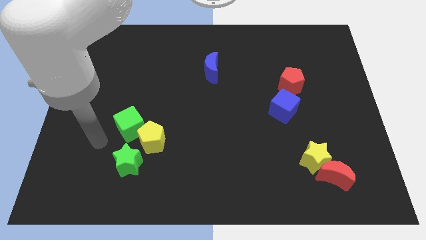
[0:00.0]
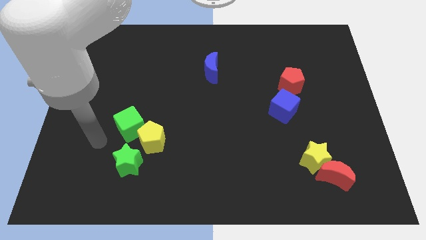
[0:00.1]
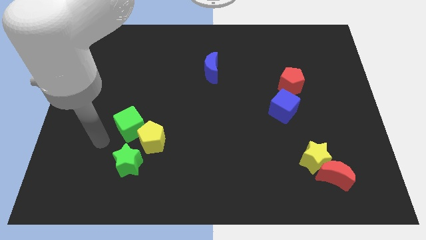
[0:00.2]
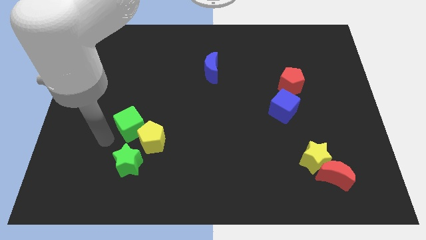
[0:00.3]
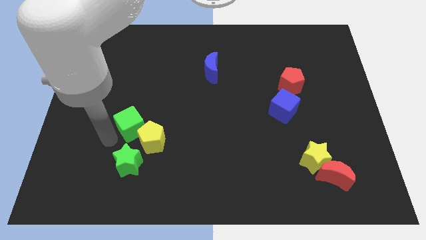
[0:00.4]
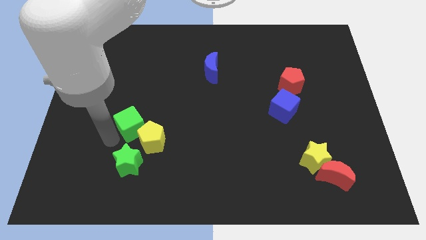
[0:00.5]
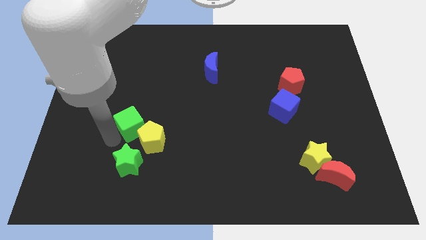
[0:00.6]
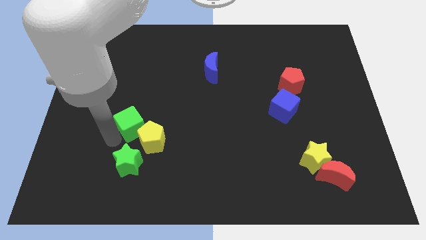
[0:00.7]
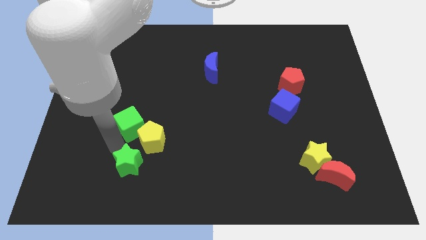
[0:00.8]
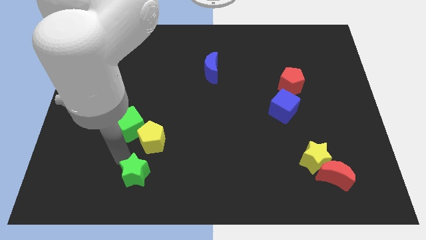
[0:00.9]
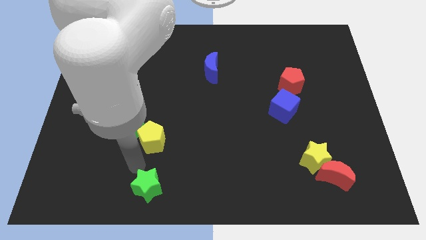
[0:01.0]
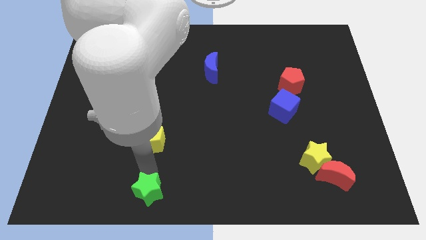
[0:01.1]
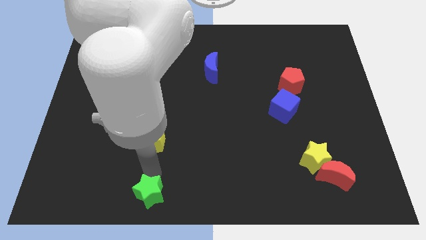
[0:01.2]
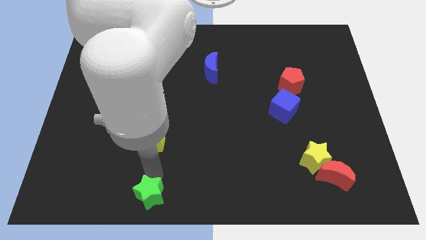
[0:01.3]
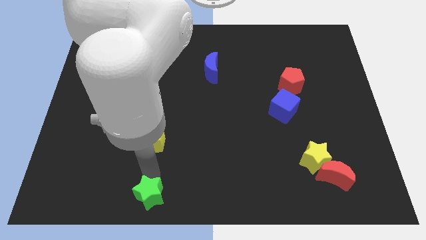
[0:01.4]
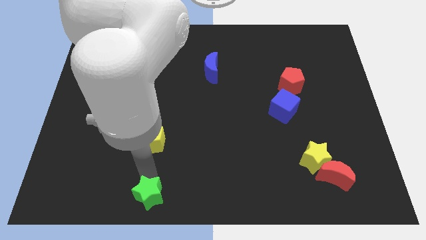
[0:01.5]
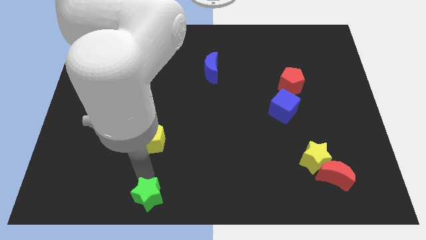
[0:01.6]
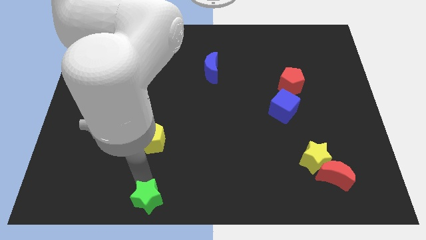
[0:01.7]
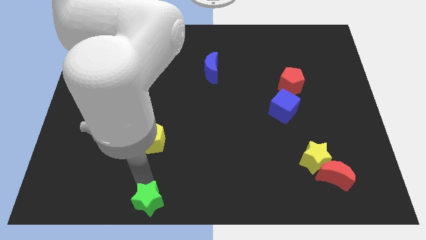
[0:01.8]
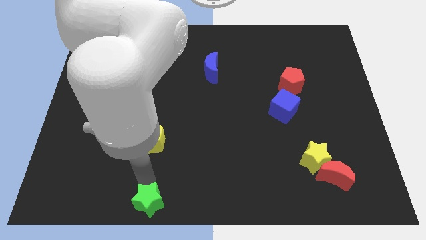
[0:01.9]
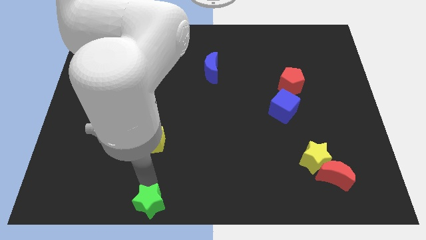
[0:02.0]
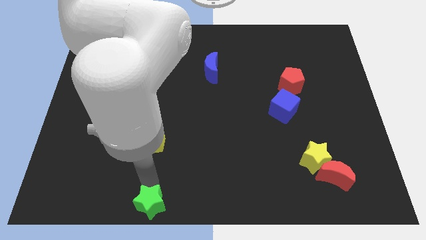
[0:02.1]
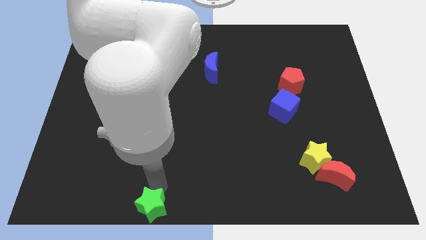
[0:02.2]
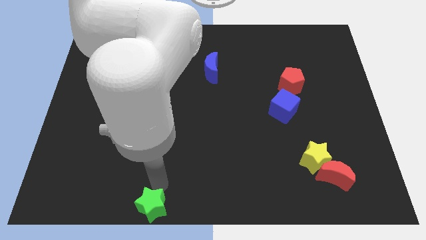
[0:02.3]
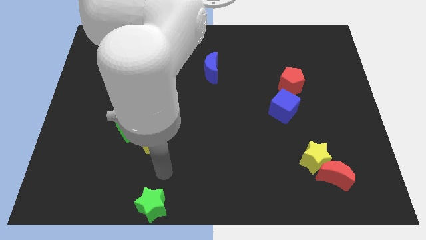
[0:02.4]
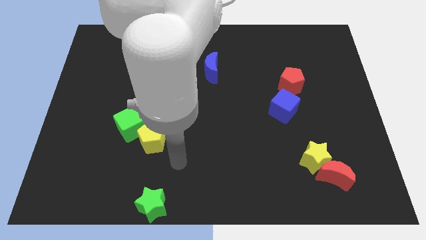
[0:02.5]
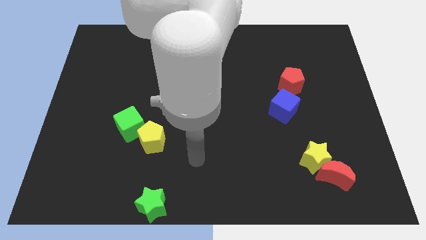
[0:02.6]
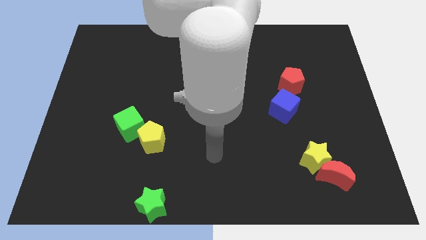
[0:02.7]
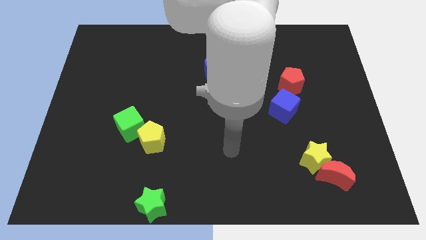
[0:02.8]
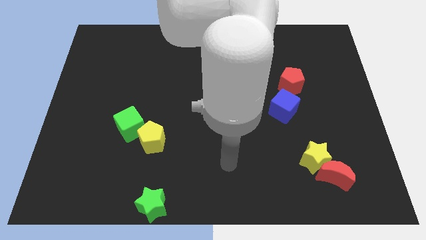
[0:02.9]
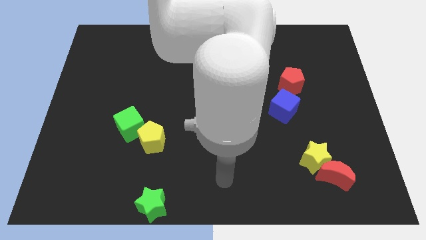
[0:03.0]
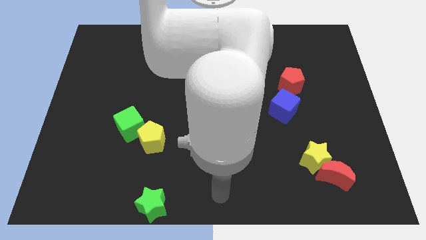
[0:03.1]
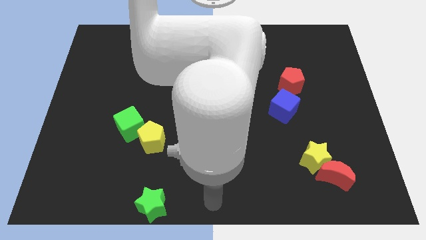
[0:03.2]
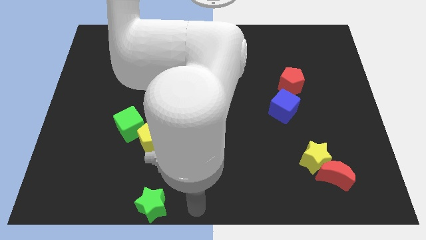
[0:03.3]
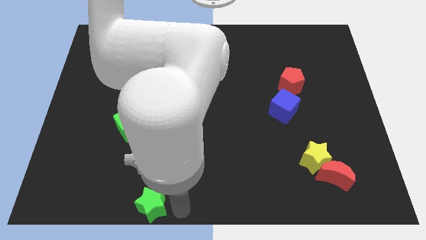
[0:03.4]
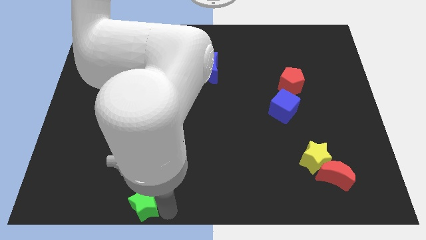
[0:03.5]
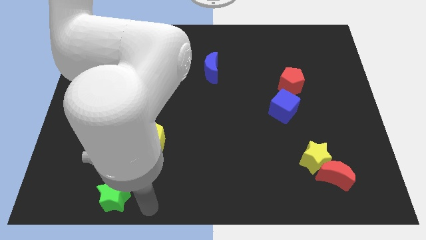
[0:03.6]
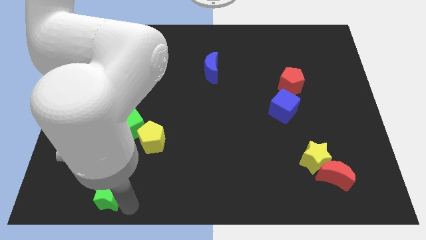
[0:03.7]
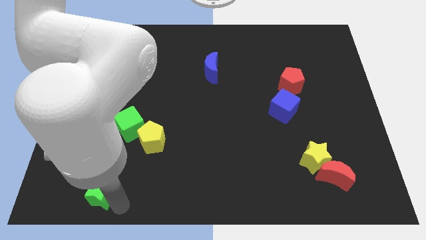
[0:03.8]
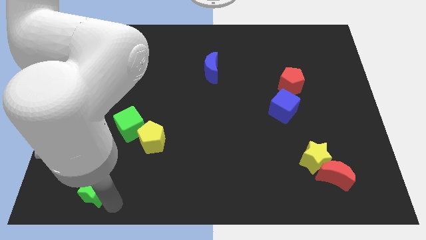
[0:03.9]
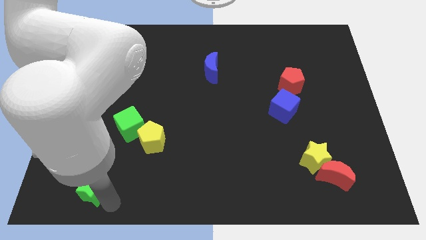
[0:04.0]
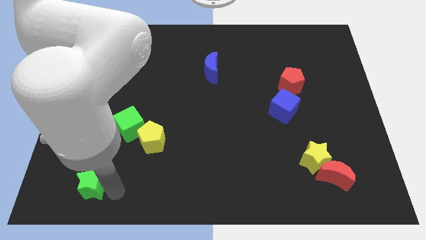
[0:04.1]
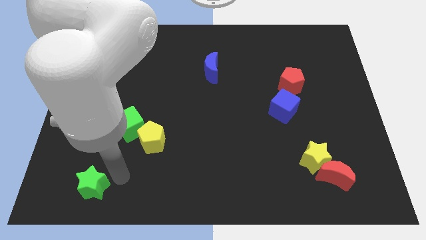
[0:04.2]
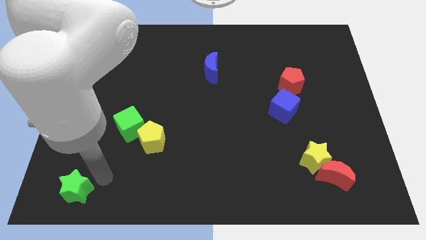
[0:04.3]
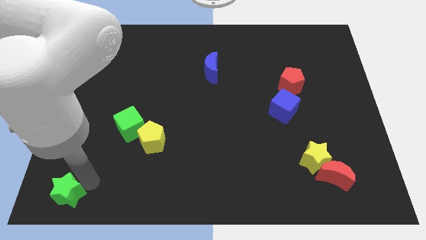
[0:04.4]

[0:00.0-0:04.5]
push the green star towards the left corner of the board

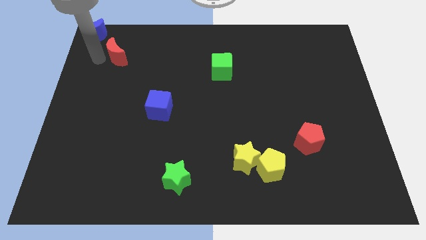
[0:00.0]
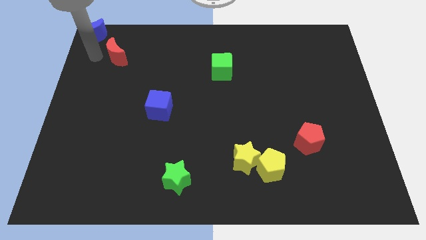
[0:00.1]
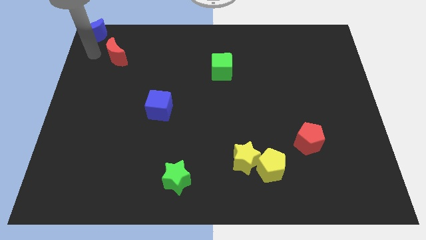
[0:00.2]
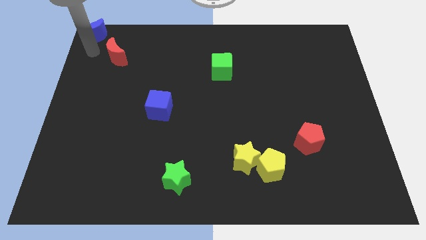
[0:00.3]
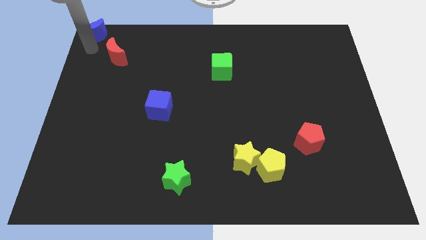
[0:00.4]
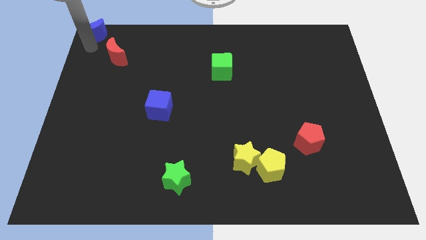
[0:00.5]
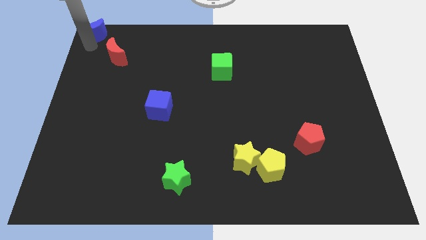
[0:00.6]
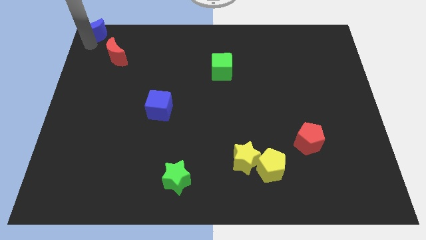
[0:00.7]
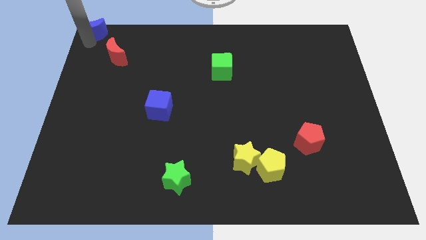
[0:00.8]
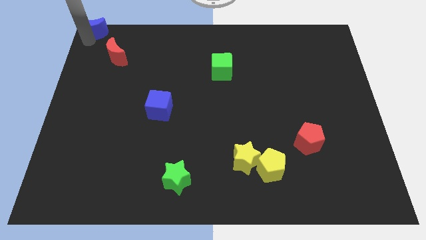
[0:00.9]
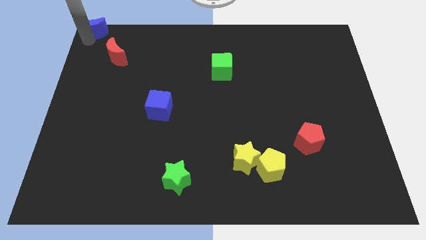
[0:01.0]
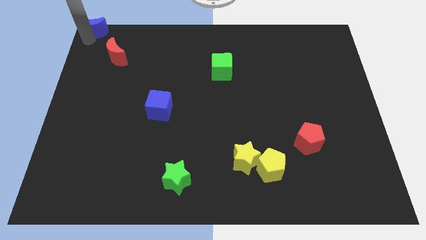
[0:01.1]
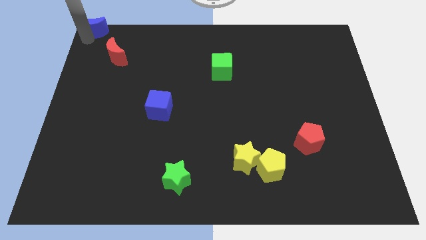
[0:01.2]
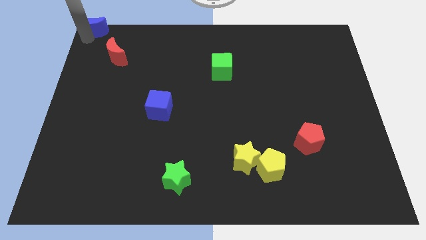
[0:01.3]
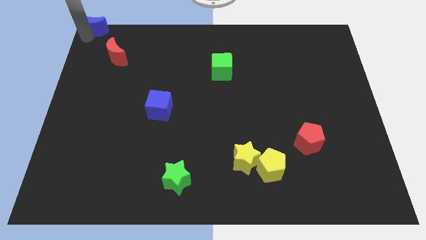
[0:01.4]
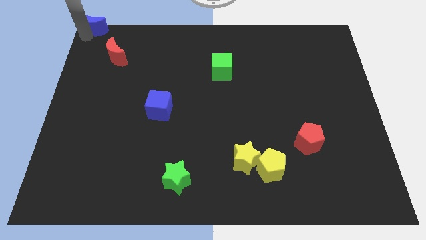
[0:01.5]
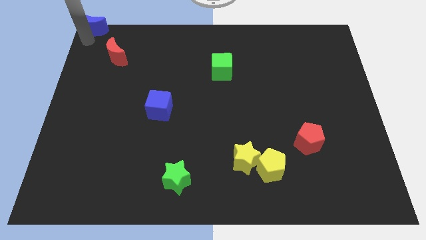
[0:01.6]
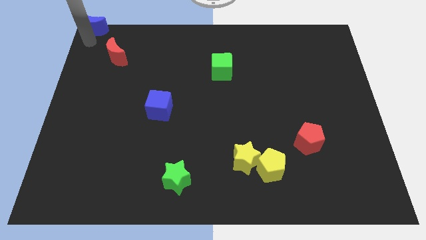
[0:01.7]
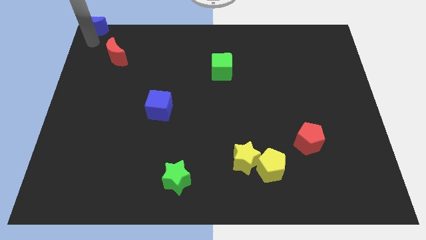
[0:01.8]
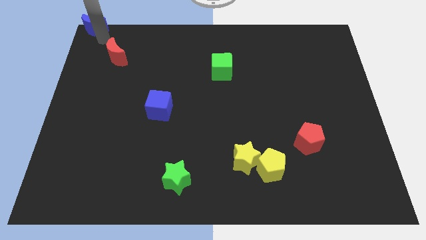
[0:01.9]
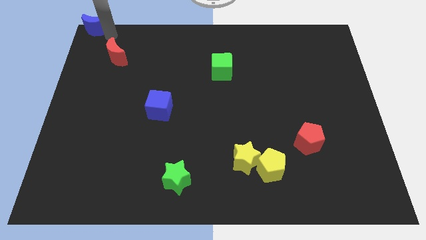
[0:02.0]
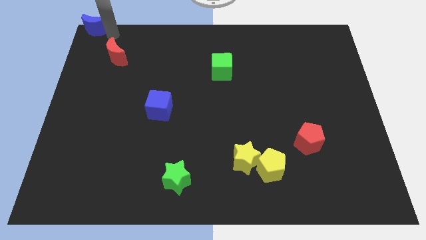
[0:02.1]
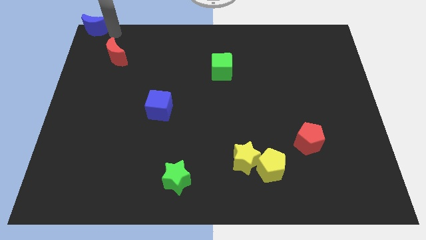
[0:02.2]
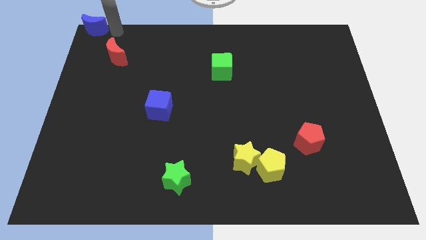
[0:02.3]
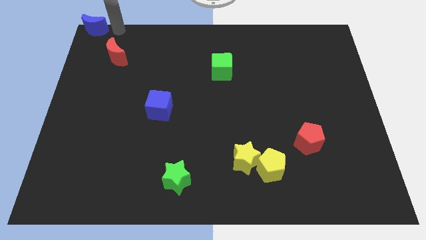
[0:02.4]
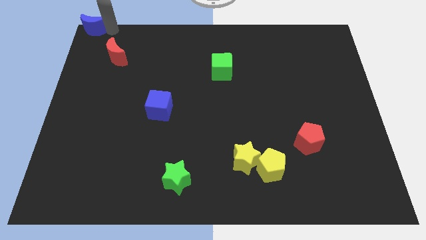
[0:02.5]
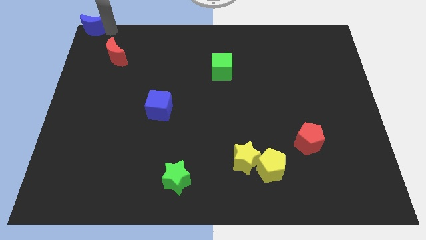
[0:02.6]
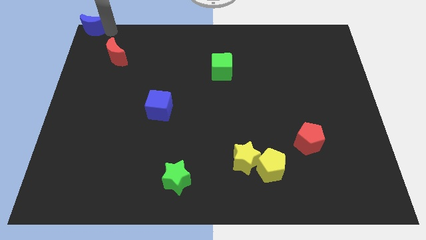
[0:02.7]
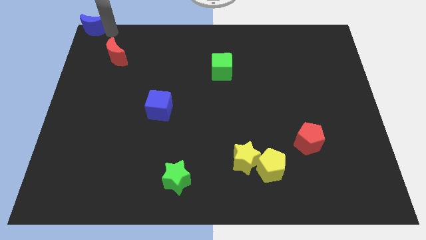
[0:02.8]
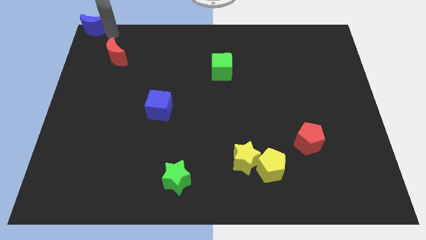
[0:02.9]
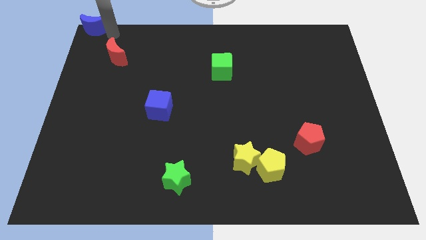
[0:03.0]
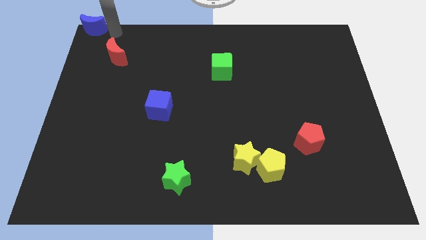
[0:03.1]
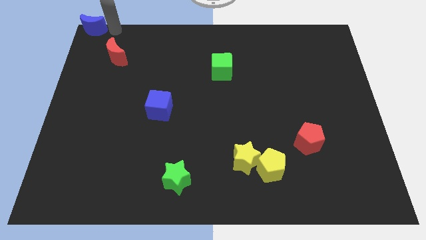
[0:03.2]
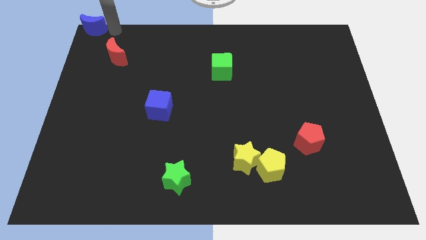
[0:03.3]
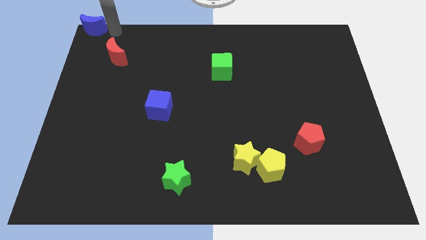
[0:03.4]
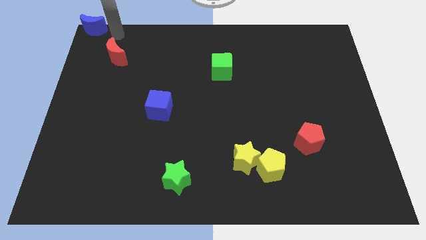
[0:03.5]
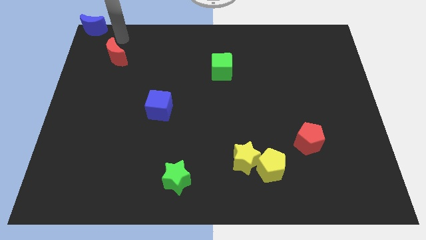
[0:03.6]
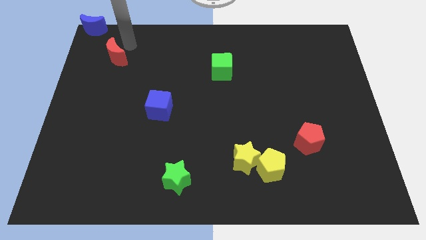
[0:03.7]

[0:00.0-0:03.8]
slightly move the blue crescent to the top left side of the board

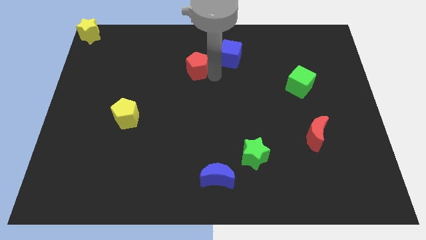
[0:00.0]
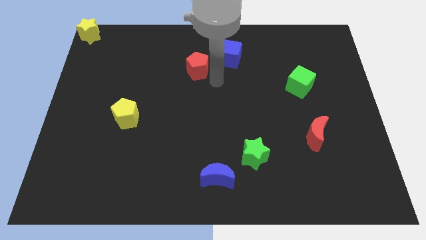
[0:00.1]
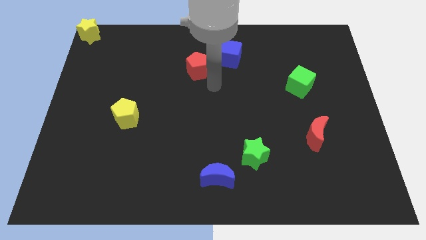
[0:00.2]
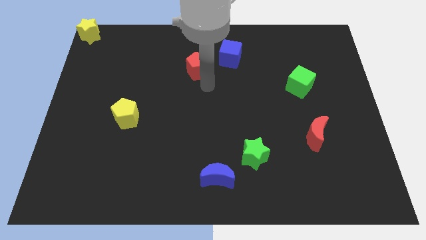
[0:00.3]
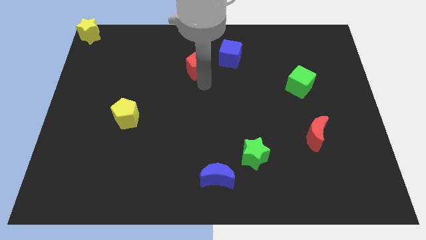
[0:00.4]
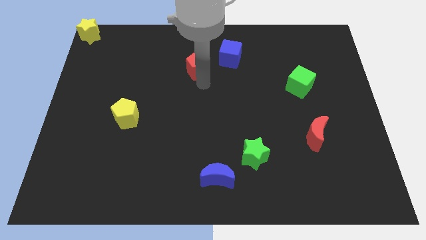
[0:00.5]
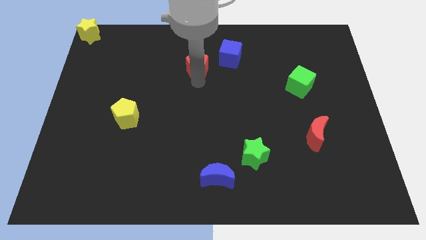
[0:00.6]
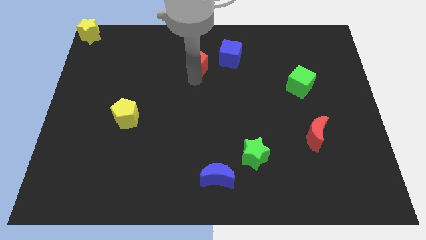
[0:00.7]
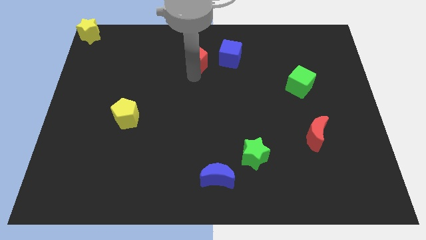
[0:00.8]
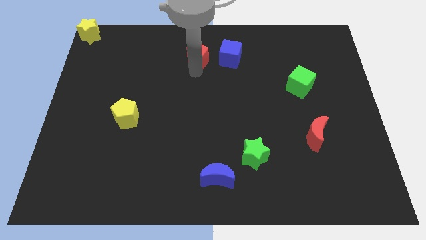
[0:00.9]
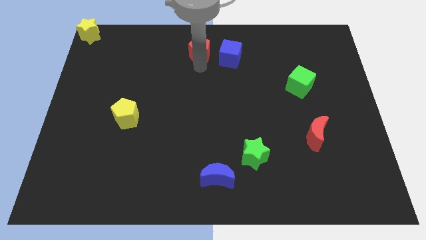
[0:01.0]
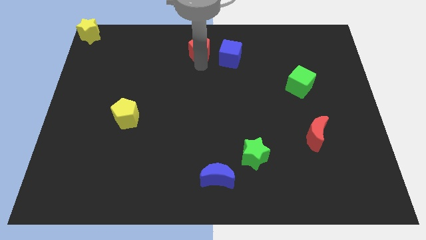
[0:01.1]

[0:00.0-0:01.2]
place the red pentagon to the left side of blue cube
